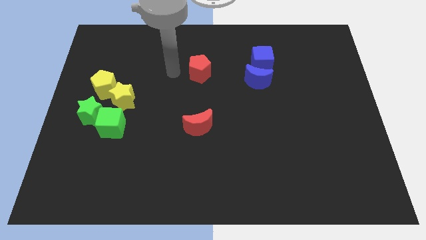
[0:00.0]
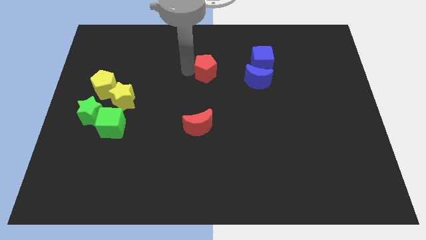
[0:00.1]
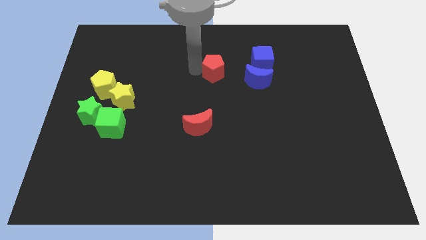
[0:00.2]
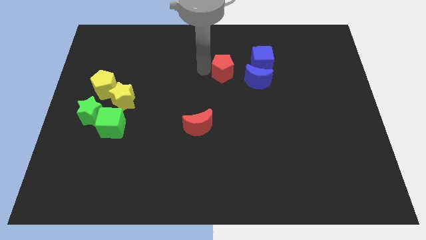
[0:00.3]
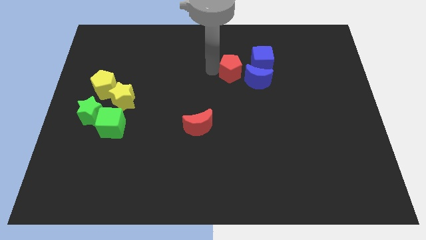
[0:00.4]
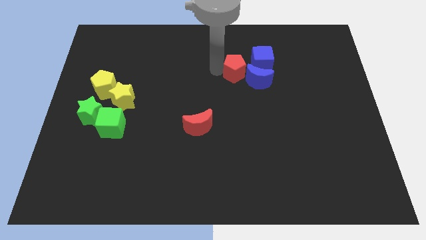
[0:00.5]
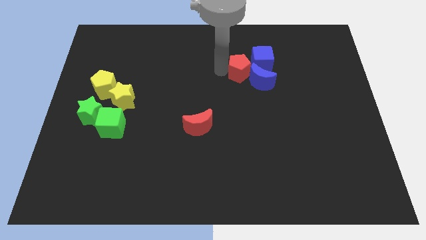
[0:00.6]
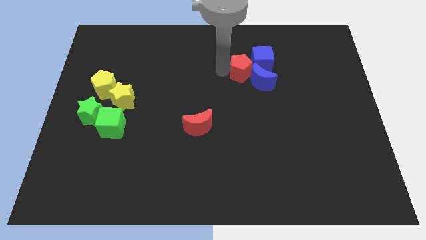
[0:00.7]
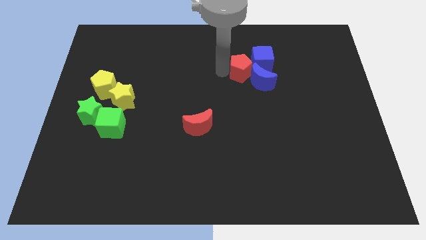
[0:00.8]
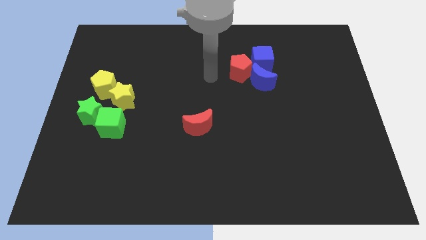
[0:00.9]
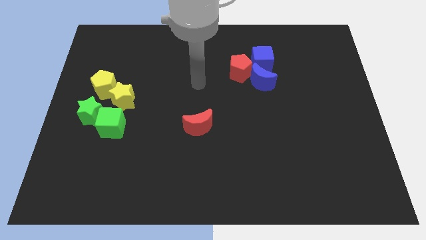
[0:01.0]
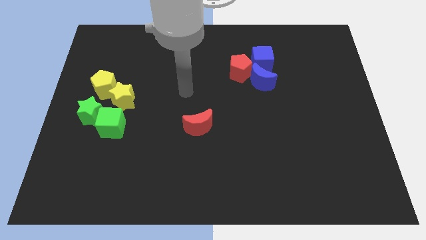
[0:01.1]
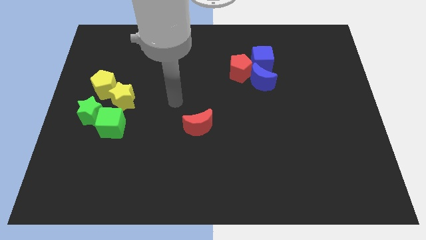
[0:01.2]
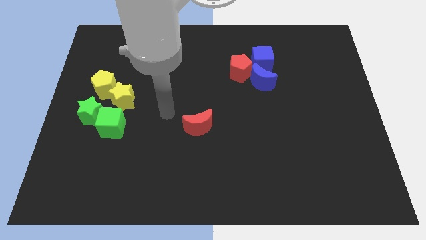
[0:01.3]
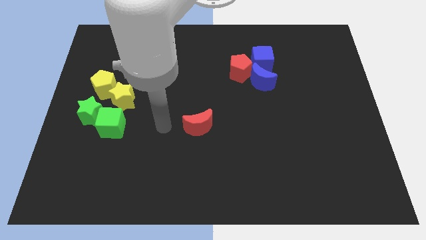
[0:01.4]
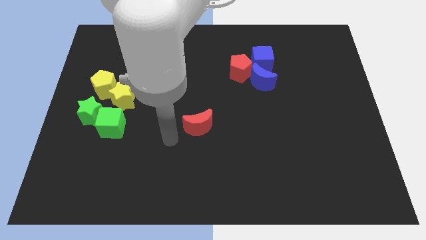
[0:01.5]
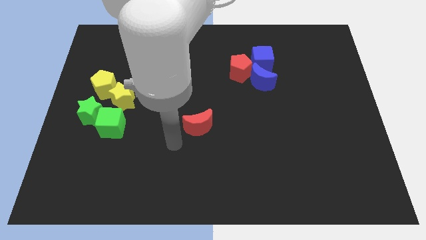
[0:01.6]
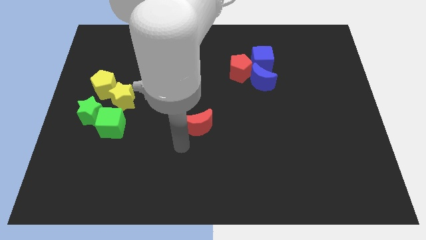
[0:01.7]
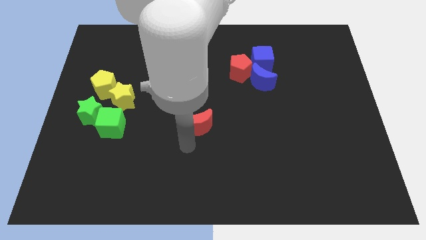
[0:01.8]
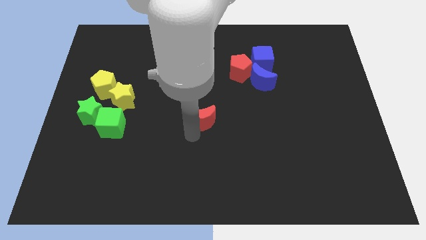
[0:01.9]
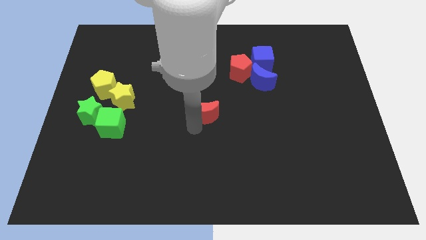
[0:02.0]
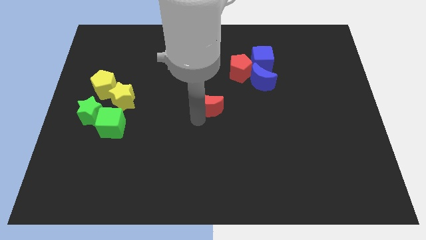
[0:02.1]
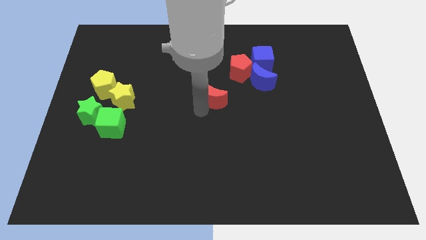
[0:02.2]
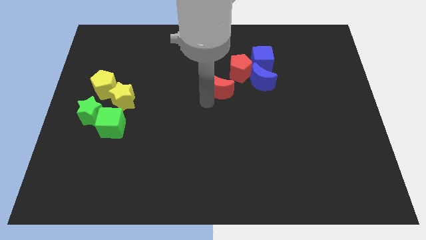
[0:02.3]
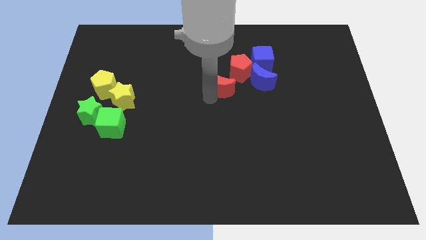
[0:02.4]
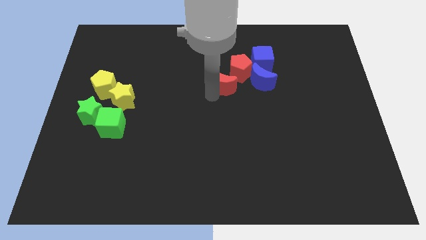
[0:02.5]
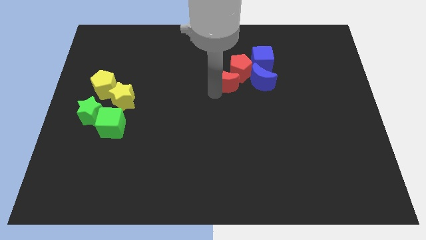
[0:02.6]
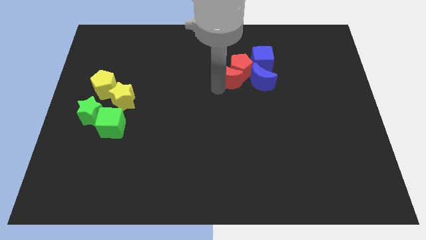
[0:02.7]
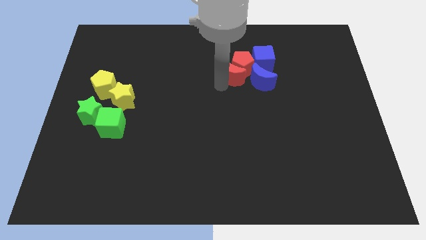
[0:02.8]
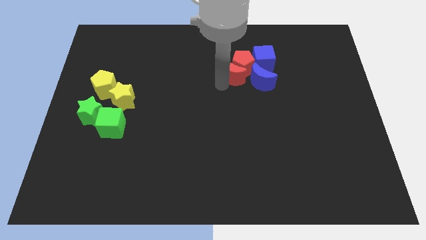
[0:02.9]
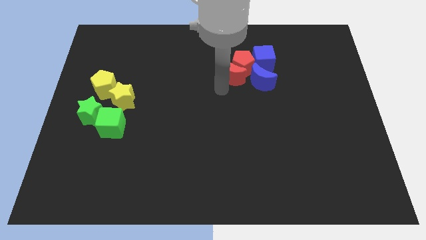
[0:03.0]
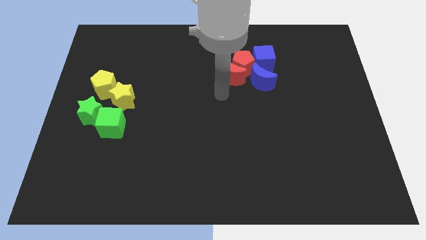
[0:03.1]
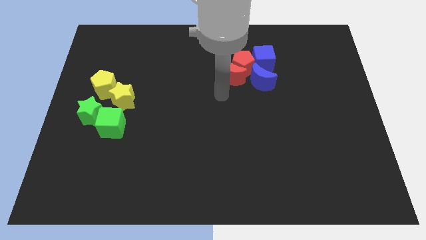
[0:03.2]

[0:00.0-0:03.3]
push the red moon into the red pentagon

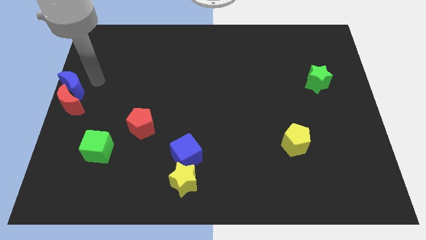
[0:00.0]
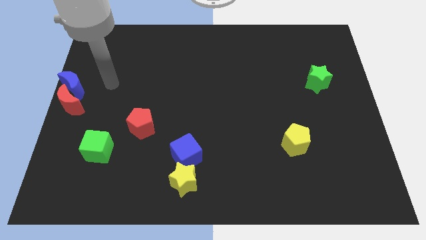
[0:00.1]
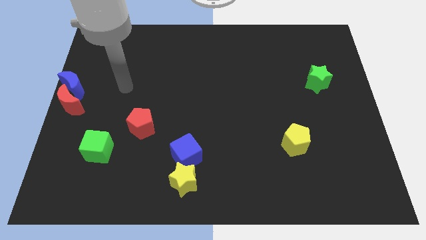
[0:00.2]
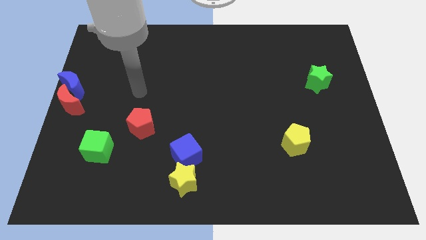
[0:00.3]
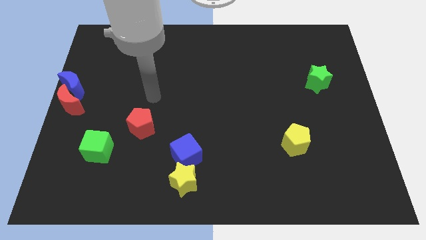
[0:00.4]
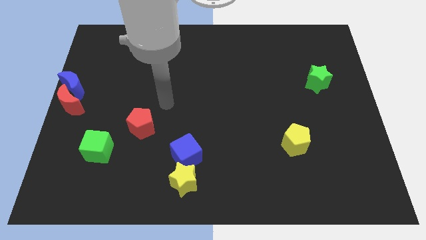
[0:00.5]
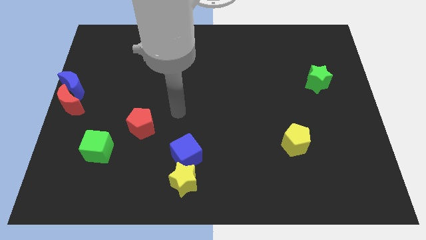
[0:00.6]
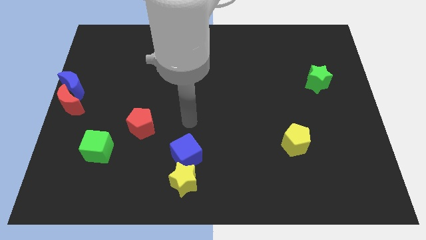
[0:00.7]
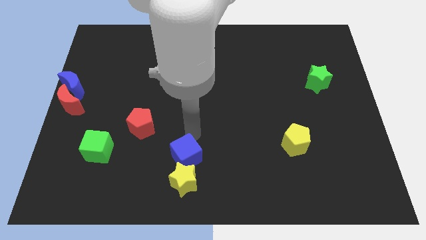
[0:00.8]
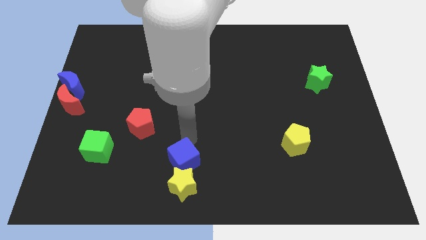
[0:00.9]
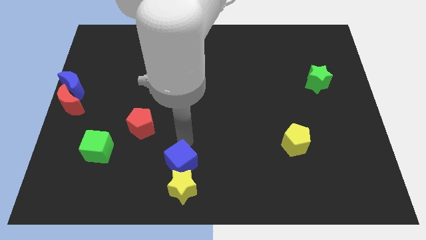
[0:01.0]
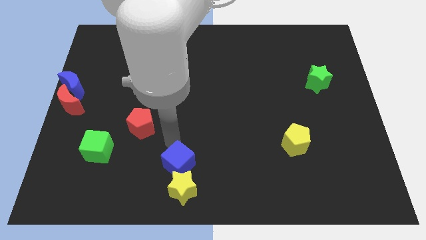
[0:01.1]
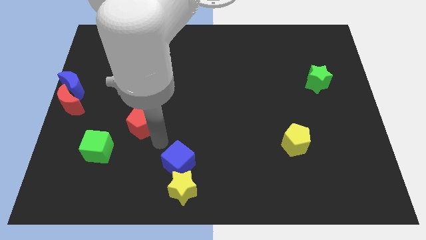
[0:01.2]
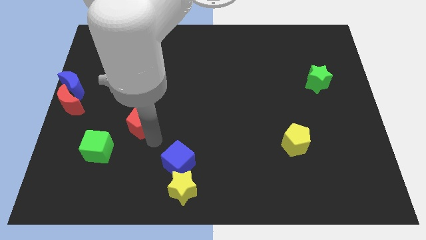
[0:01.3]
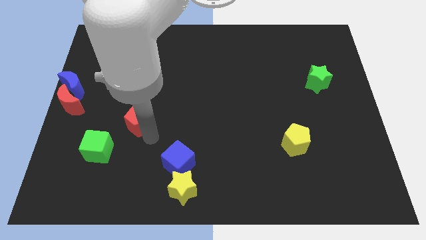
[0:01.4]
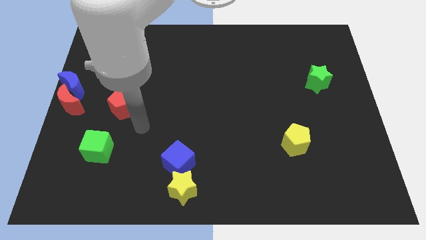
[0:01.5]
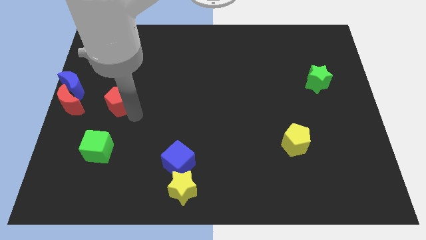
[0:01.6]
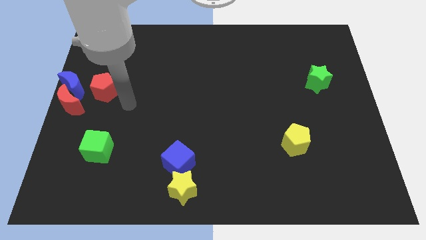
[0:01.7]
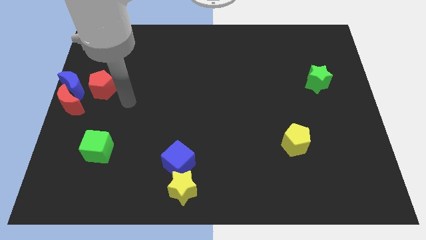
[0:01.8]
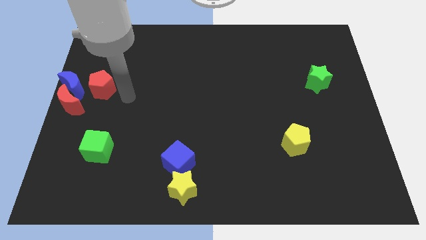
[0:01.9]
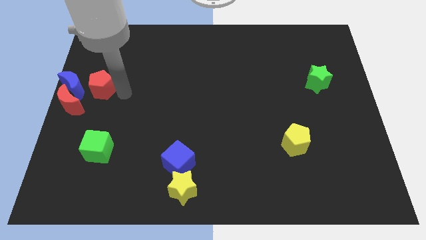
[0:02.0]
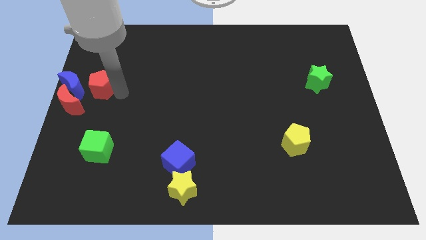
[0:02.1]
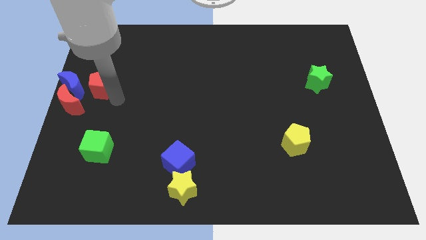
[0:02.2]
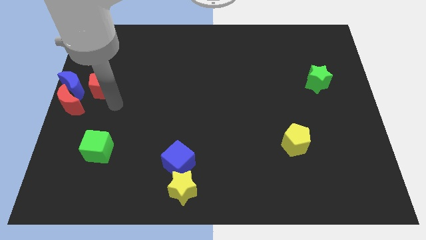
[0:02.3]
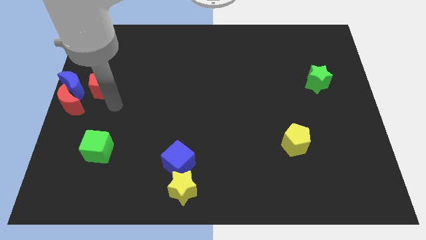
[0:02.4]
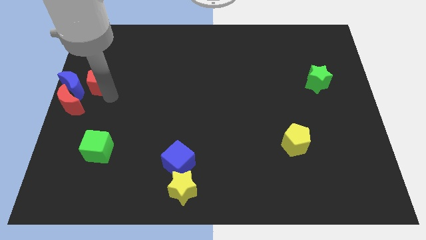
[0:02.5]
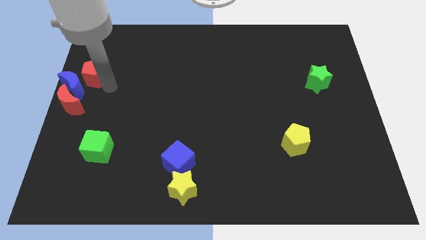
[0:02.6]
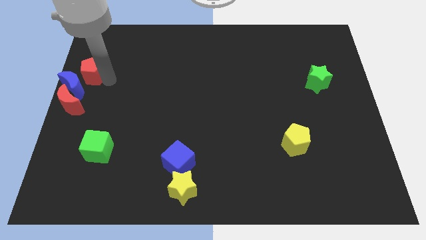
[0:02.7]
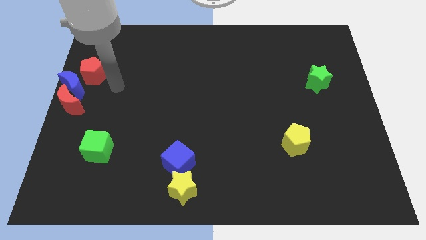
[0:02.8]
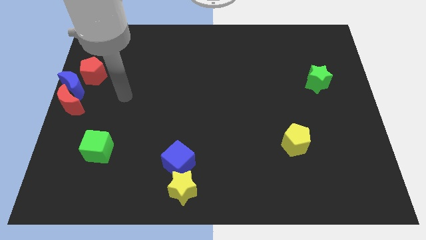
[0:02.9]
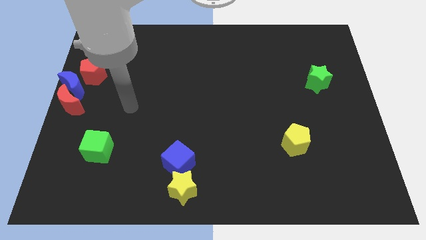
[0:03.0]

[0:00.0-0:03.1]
drag red pentagon up to the top right of blue moon

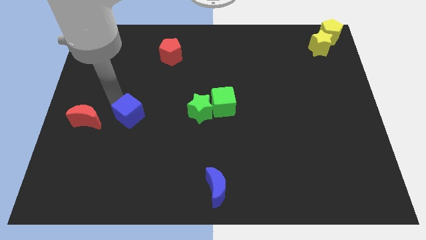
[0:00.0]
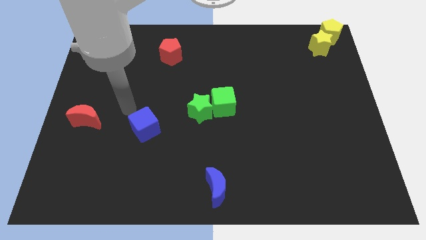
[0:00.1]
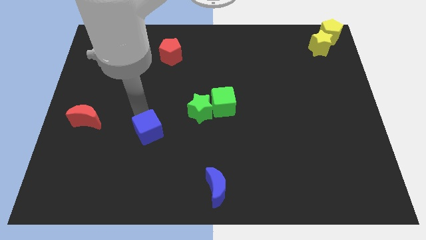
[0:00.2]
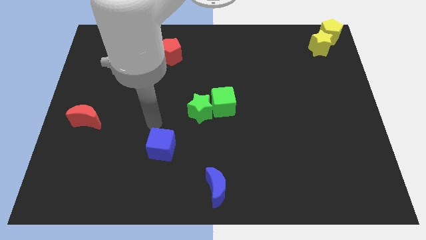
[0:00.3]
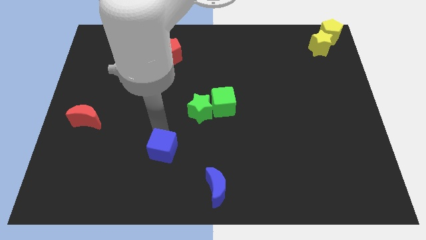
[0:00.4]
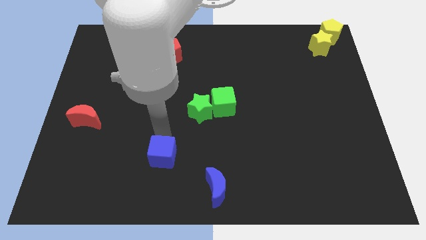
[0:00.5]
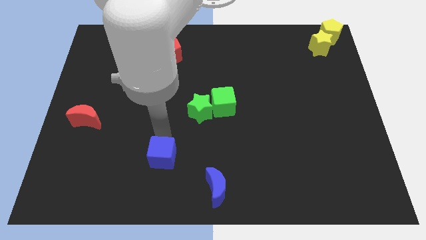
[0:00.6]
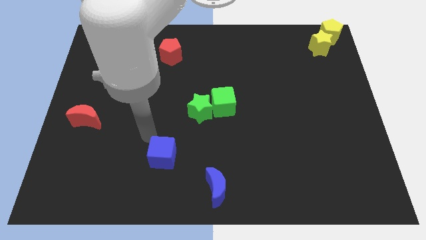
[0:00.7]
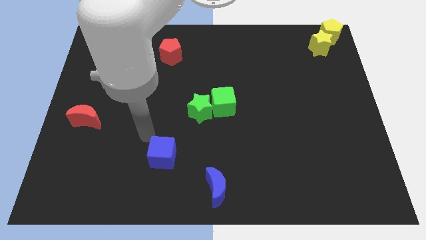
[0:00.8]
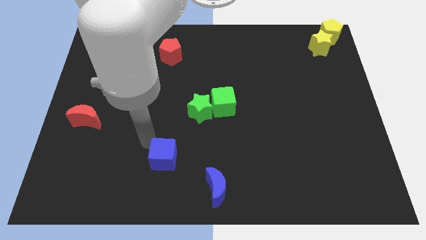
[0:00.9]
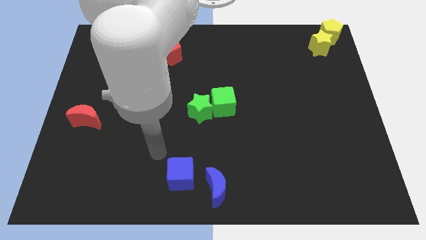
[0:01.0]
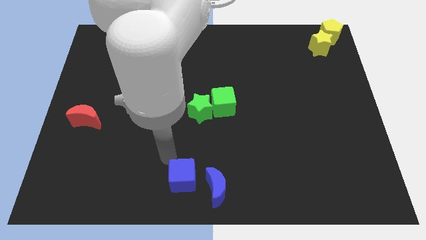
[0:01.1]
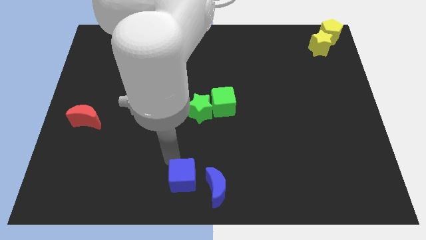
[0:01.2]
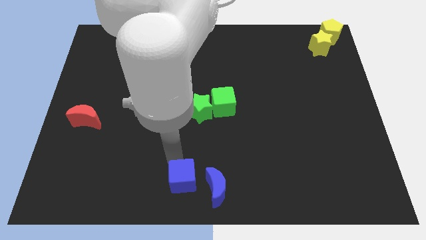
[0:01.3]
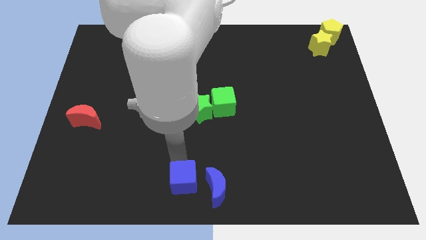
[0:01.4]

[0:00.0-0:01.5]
push the blue cube to the left side of the blue crescent

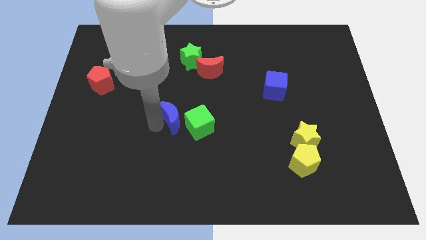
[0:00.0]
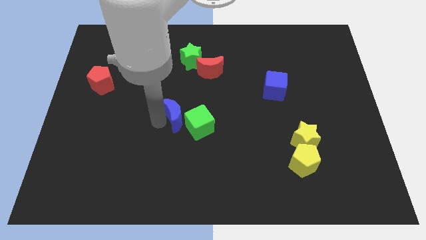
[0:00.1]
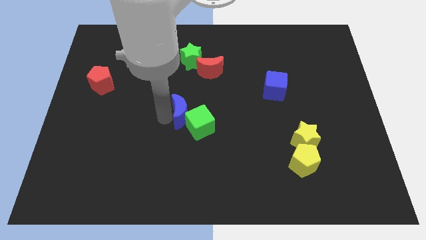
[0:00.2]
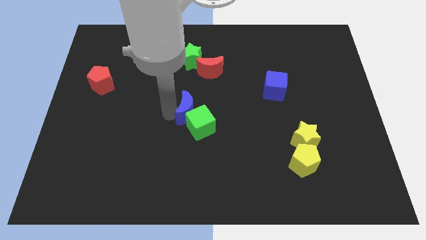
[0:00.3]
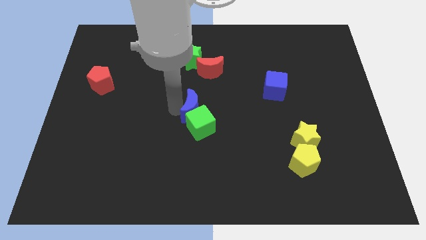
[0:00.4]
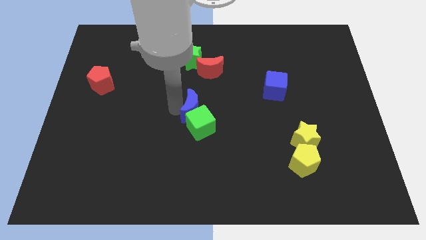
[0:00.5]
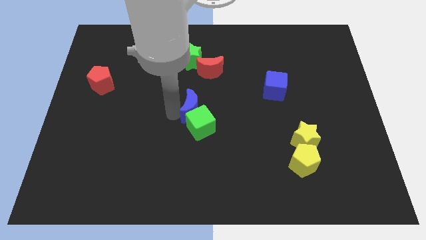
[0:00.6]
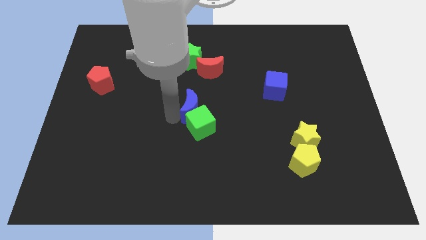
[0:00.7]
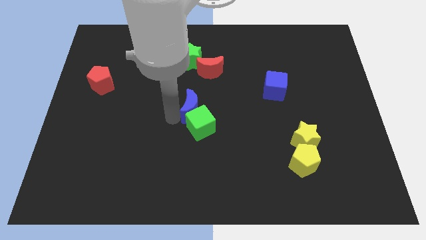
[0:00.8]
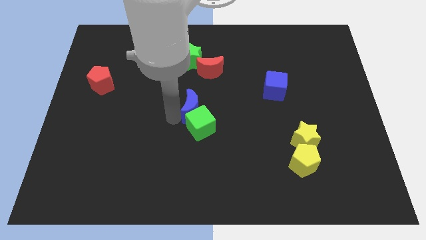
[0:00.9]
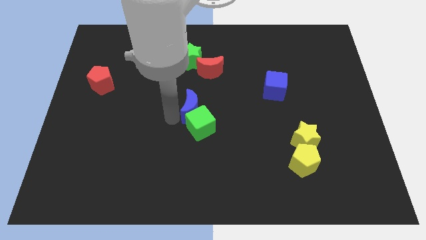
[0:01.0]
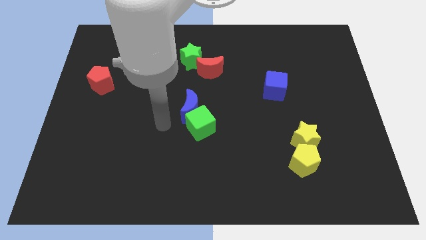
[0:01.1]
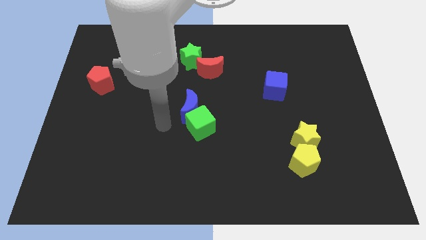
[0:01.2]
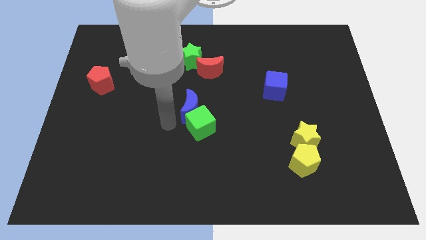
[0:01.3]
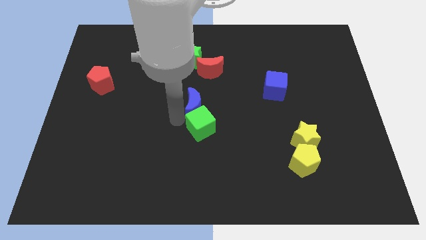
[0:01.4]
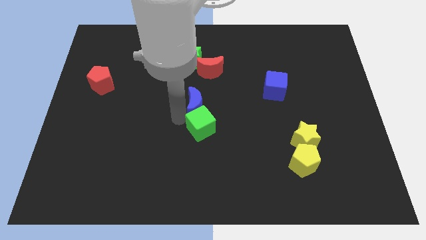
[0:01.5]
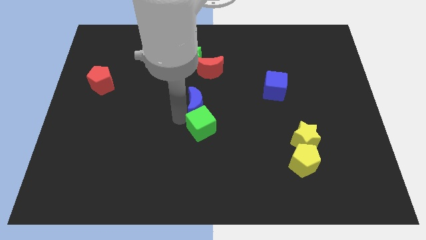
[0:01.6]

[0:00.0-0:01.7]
place blue moon above green cube
